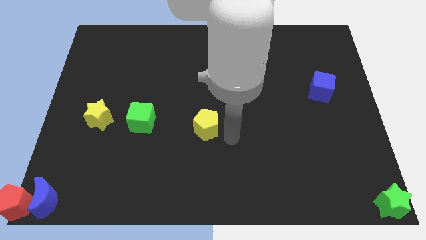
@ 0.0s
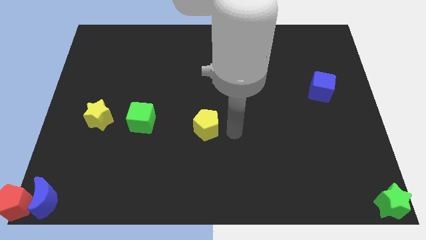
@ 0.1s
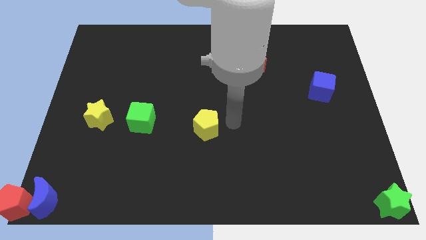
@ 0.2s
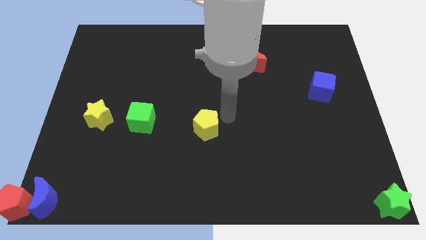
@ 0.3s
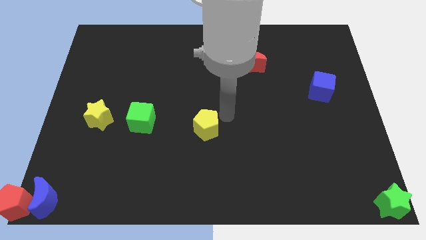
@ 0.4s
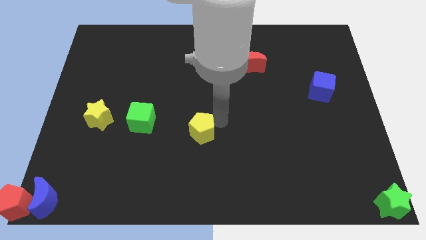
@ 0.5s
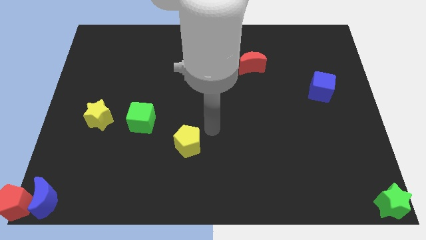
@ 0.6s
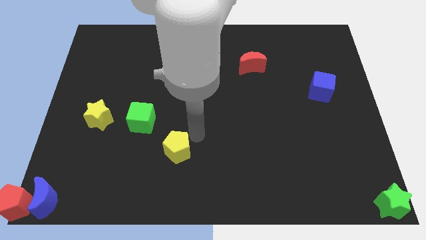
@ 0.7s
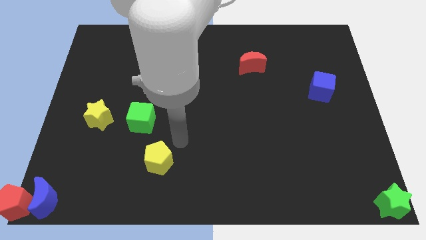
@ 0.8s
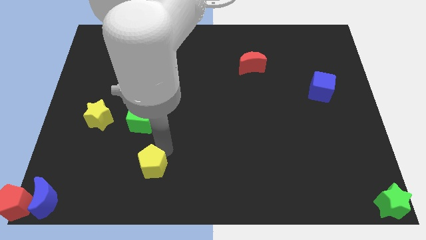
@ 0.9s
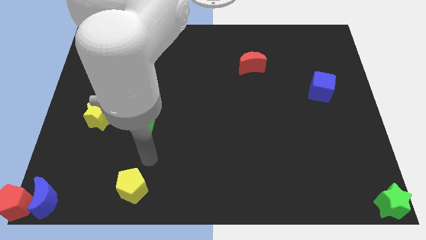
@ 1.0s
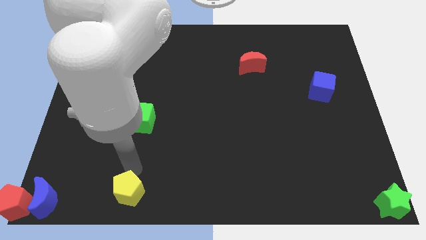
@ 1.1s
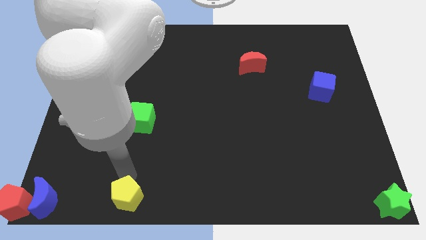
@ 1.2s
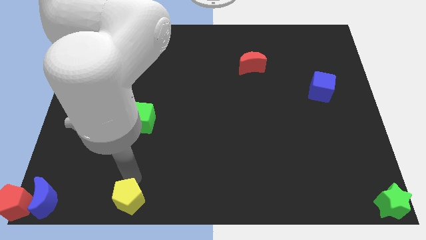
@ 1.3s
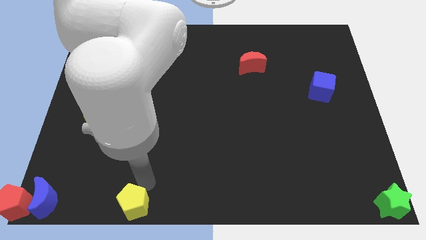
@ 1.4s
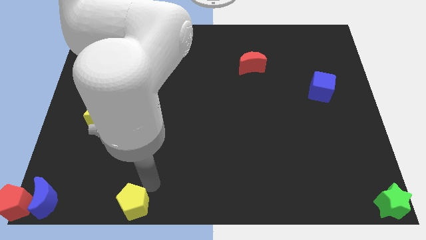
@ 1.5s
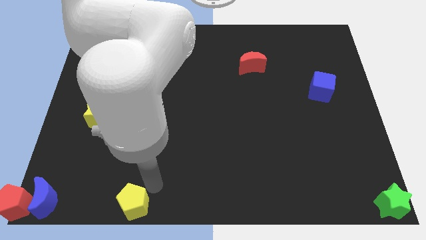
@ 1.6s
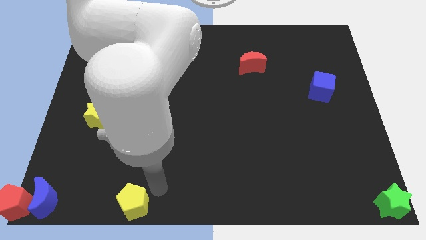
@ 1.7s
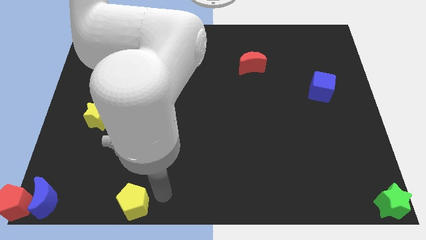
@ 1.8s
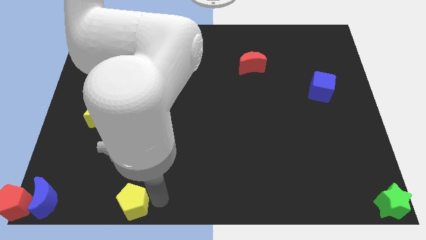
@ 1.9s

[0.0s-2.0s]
drag yellow pentagon towards bottom left of the board

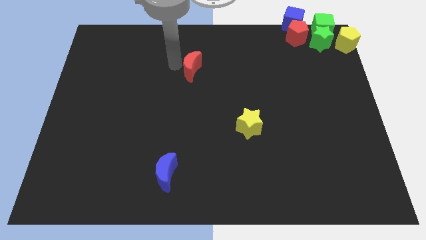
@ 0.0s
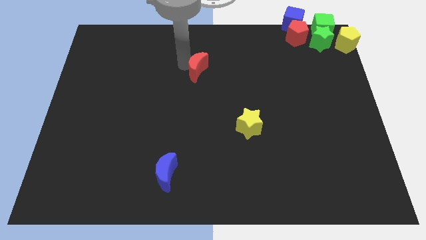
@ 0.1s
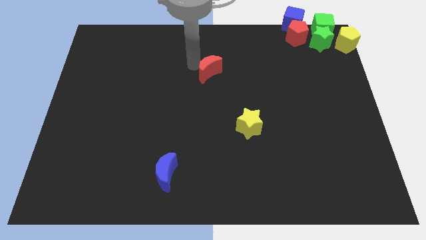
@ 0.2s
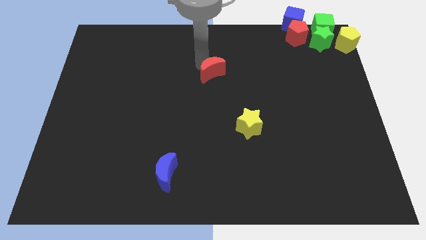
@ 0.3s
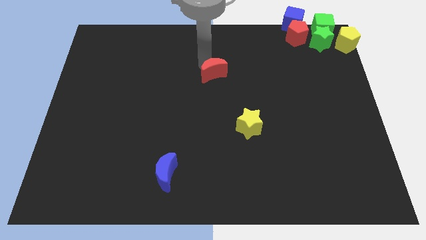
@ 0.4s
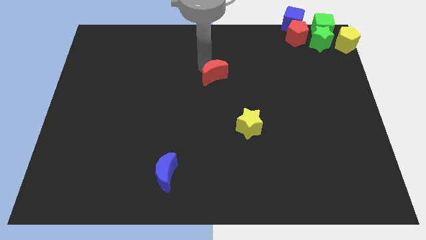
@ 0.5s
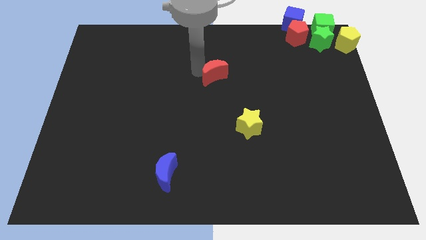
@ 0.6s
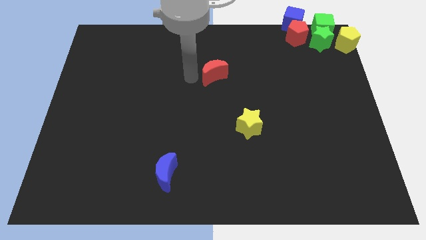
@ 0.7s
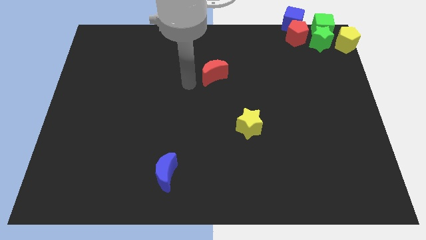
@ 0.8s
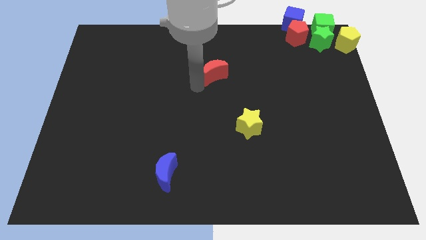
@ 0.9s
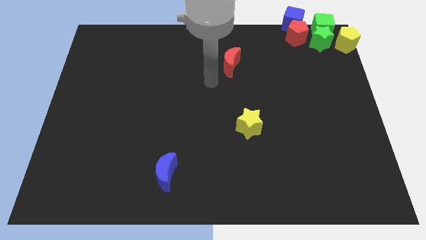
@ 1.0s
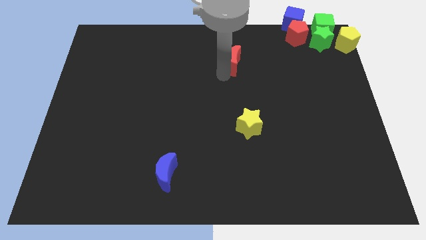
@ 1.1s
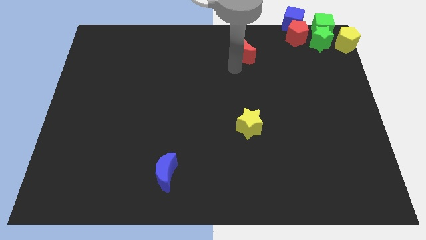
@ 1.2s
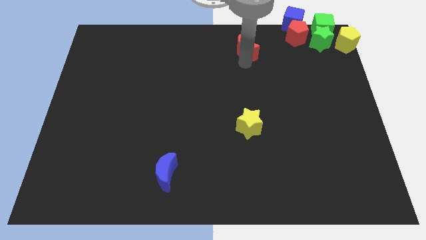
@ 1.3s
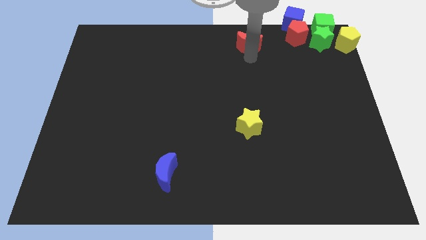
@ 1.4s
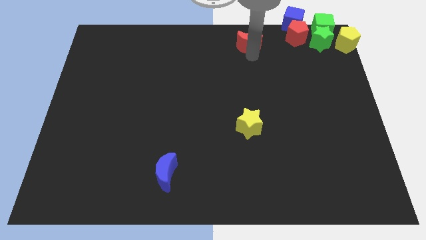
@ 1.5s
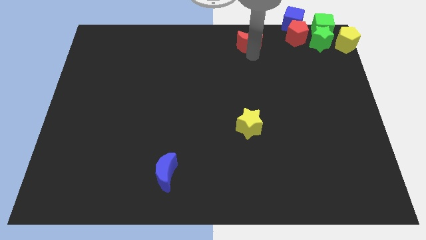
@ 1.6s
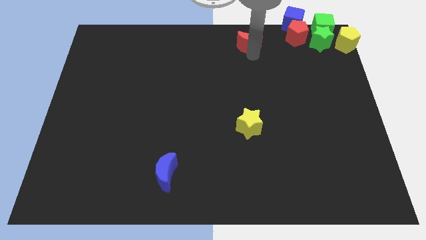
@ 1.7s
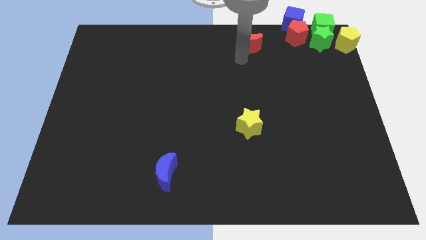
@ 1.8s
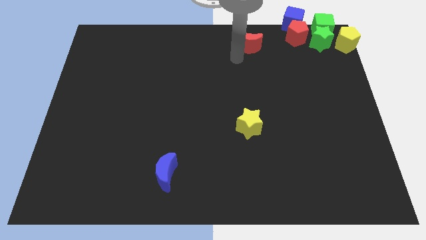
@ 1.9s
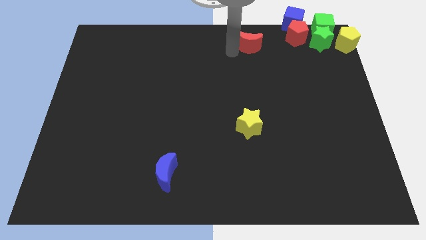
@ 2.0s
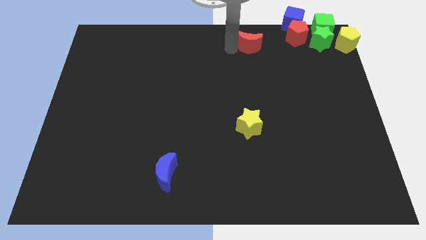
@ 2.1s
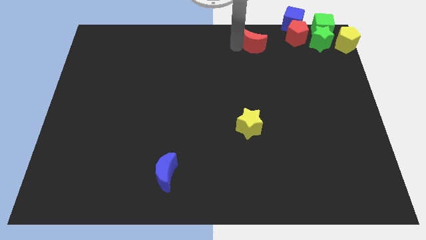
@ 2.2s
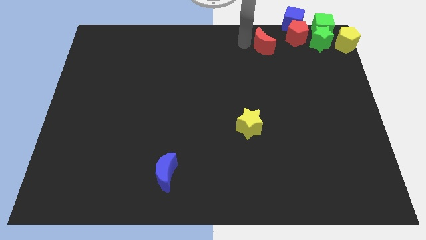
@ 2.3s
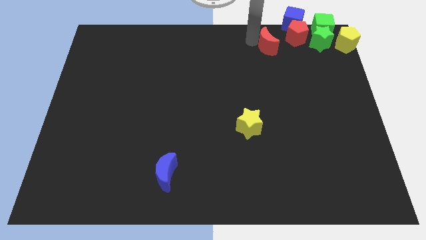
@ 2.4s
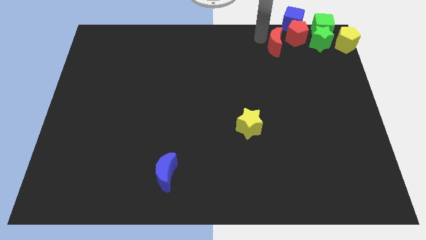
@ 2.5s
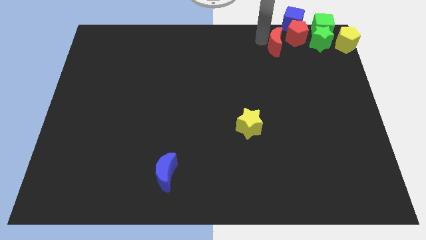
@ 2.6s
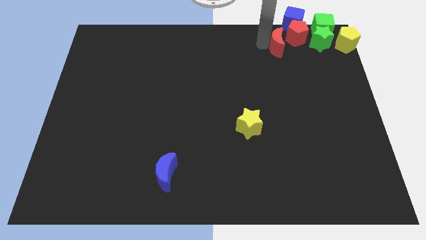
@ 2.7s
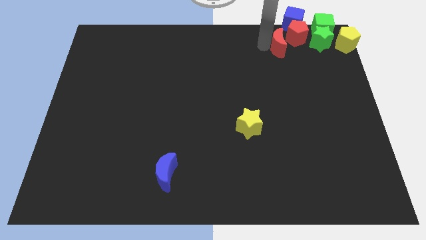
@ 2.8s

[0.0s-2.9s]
move the red crescent left to the red pentagon

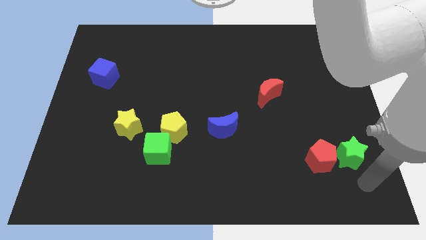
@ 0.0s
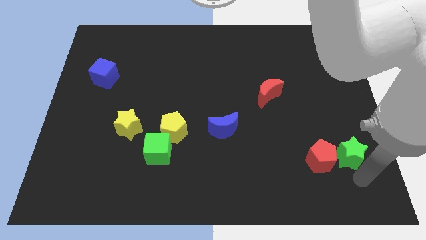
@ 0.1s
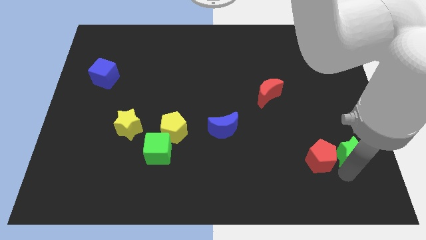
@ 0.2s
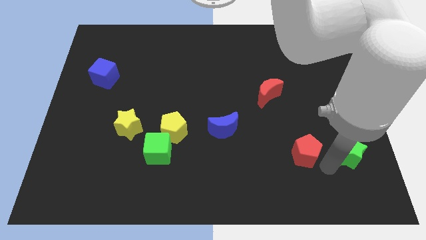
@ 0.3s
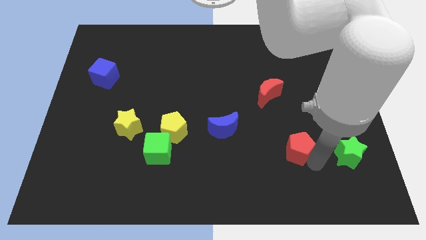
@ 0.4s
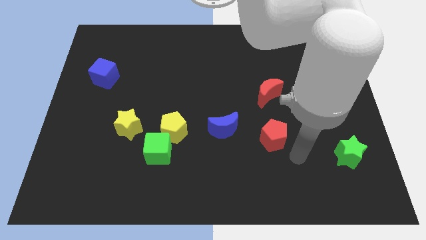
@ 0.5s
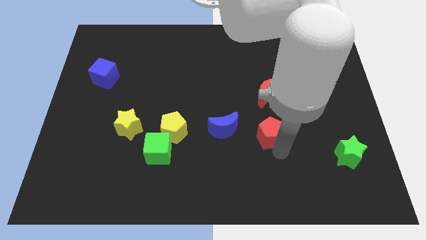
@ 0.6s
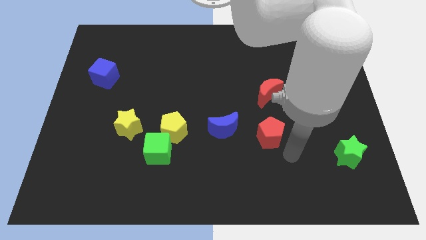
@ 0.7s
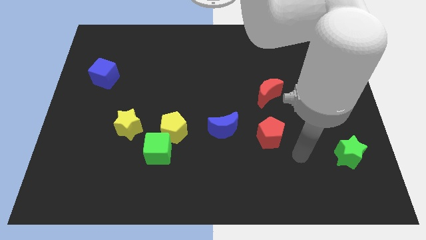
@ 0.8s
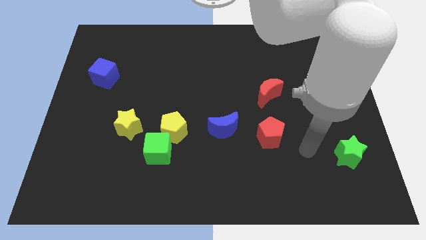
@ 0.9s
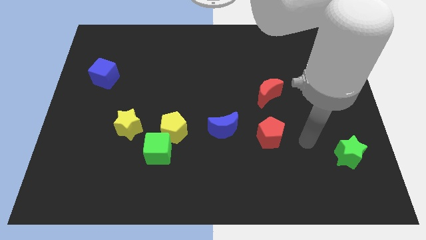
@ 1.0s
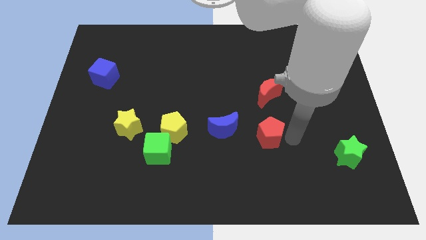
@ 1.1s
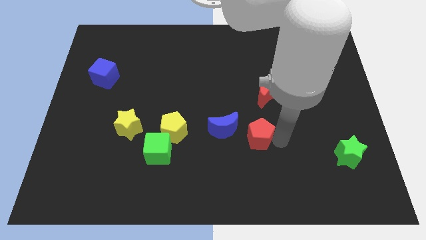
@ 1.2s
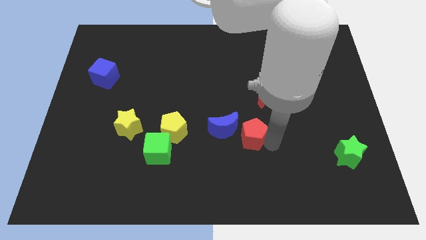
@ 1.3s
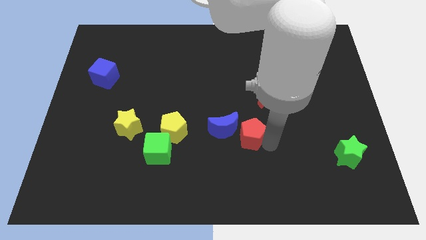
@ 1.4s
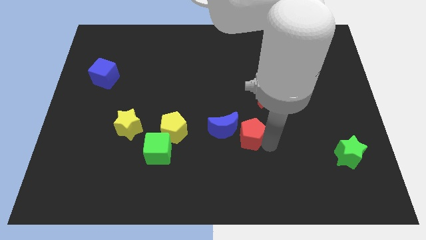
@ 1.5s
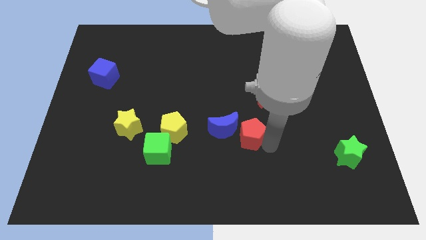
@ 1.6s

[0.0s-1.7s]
move the red pentagon to the right of the blue crescent

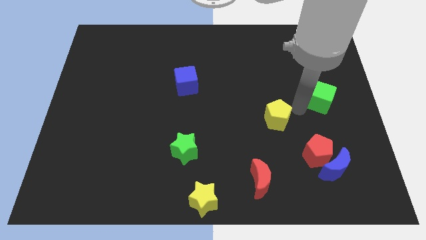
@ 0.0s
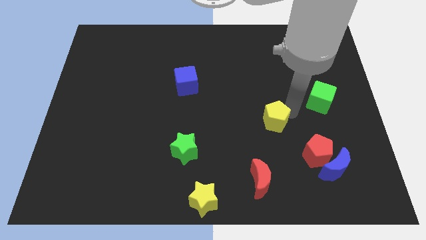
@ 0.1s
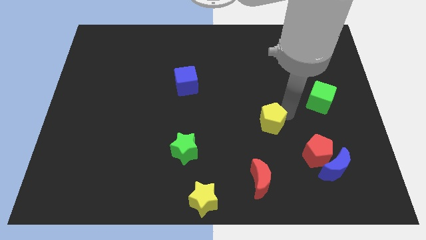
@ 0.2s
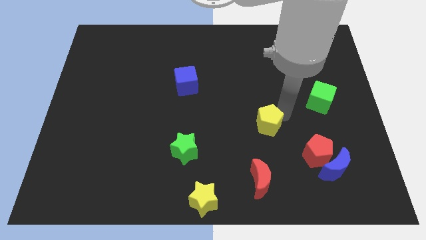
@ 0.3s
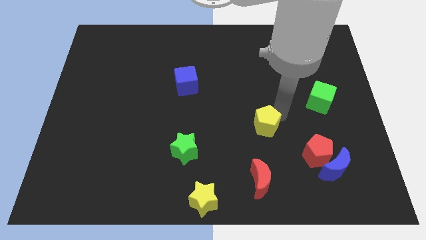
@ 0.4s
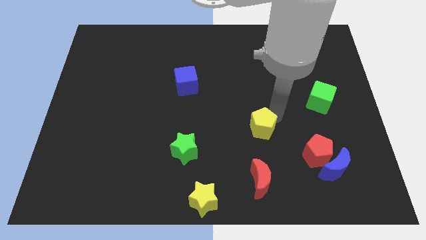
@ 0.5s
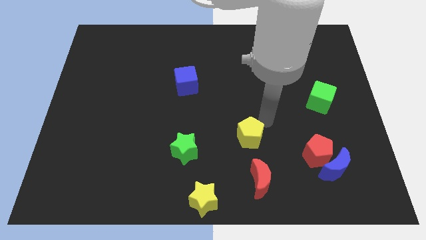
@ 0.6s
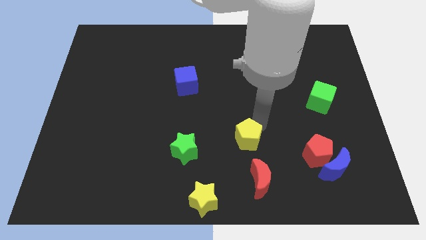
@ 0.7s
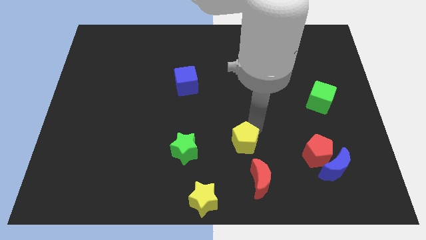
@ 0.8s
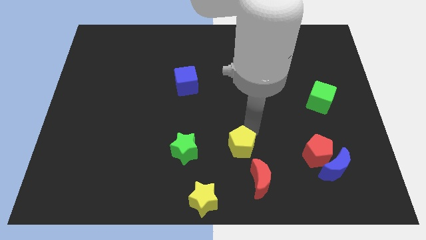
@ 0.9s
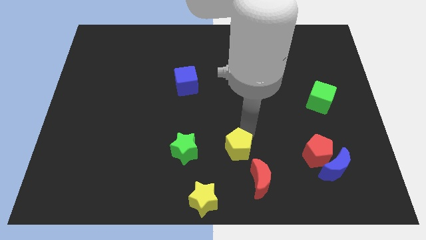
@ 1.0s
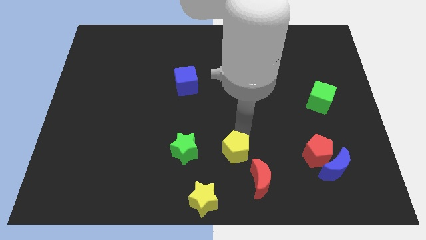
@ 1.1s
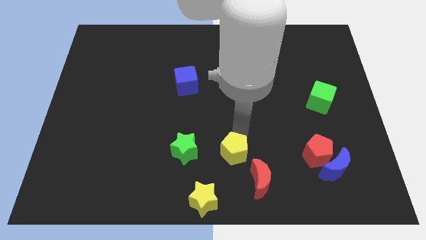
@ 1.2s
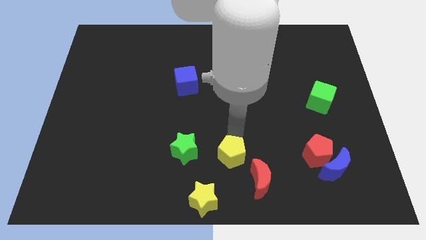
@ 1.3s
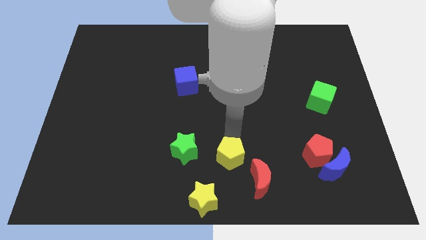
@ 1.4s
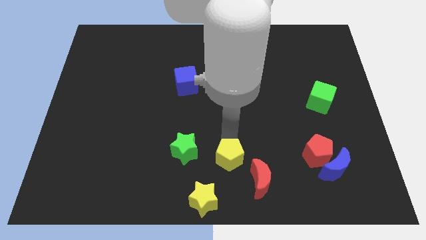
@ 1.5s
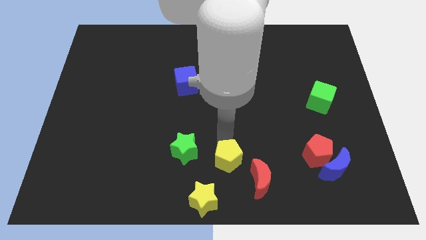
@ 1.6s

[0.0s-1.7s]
place the yellow pentagon at the top left side of the red crescent

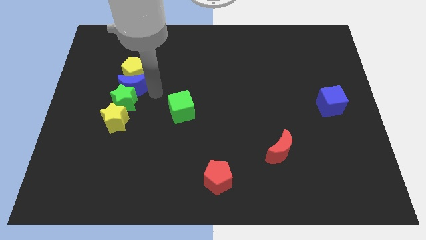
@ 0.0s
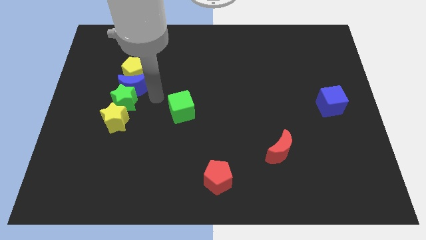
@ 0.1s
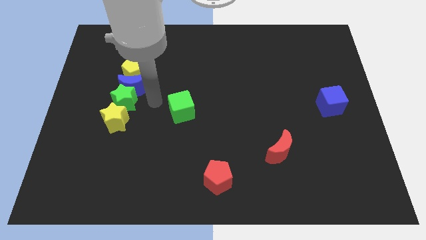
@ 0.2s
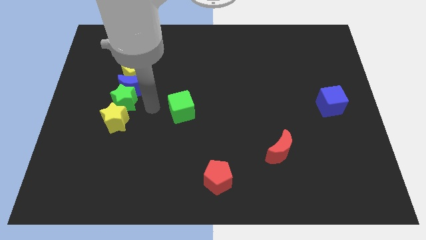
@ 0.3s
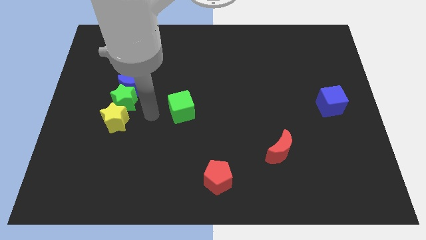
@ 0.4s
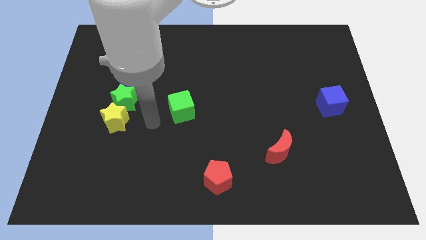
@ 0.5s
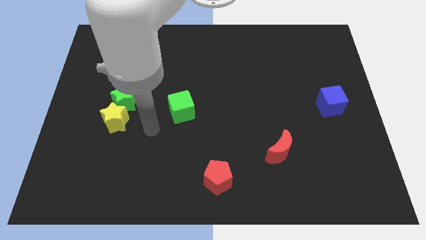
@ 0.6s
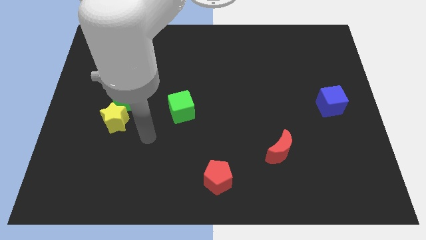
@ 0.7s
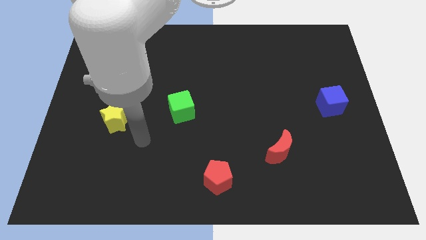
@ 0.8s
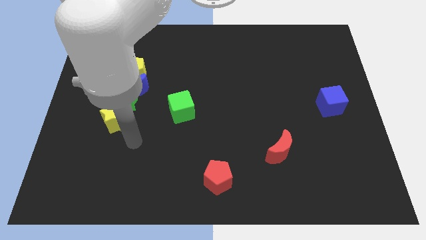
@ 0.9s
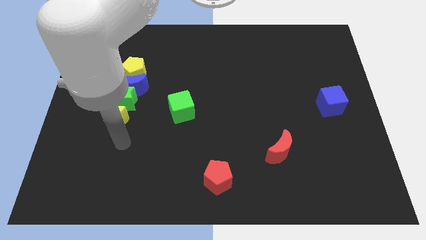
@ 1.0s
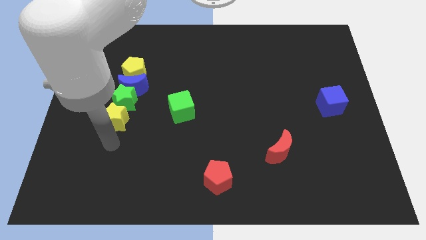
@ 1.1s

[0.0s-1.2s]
move your arm to the bottom of the yellow star
